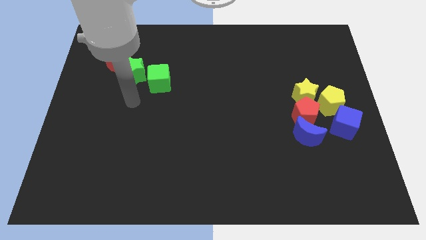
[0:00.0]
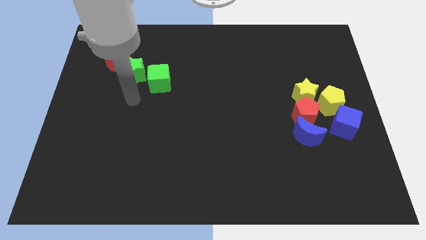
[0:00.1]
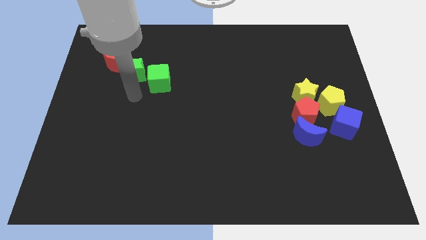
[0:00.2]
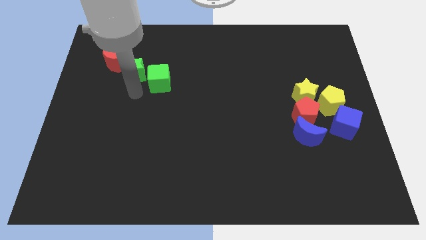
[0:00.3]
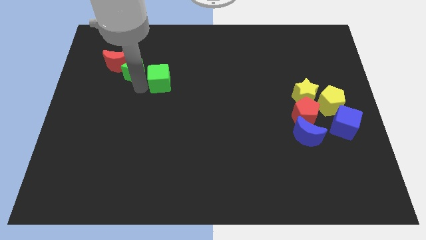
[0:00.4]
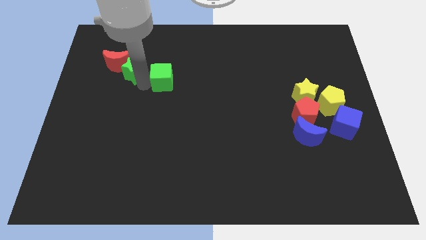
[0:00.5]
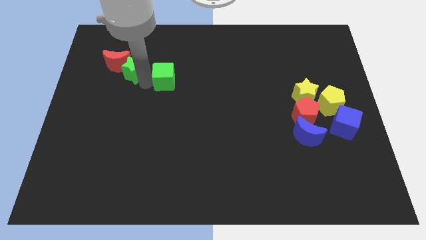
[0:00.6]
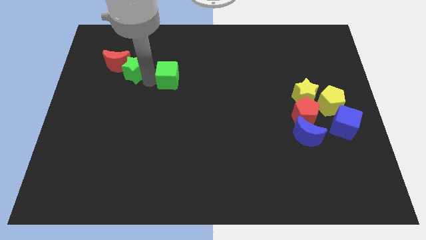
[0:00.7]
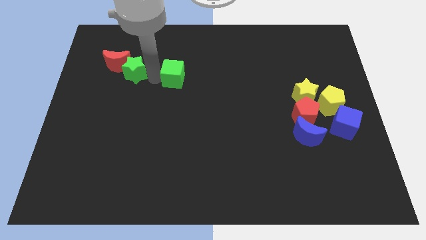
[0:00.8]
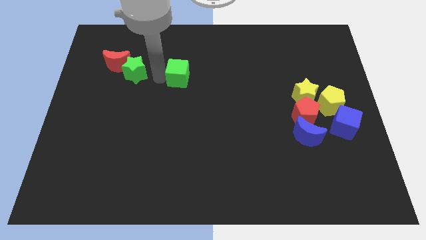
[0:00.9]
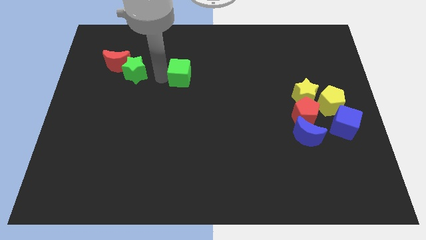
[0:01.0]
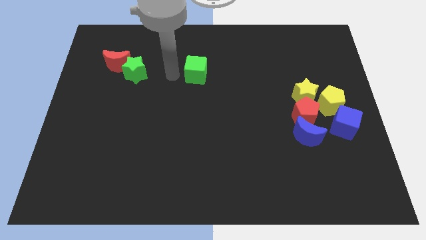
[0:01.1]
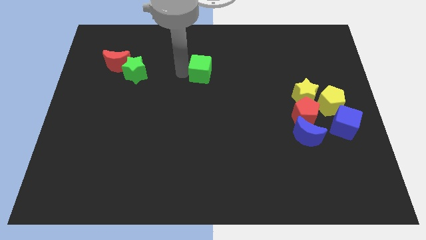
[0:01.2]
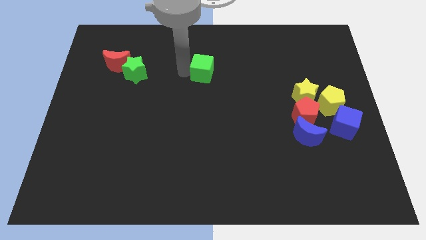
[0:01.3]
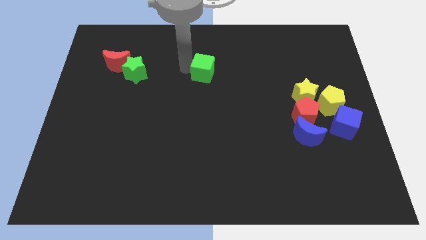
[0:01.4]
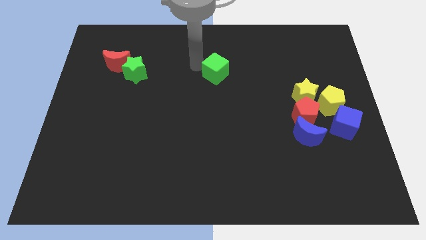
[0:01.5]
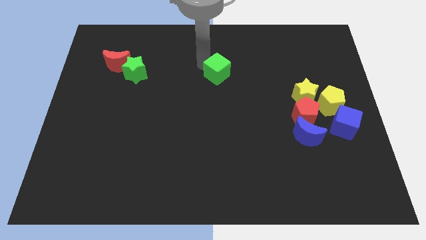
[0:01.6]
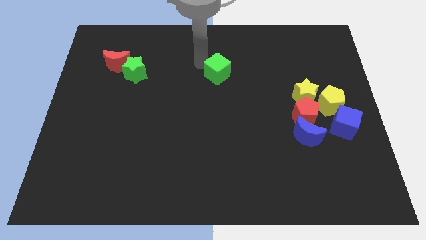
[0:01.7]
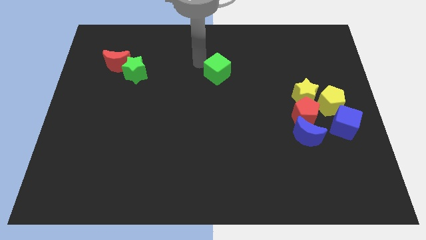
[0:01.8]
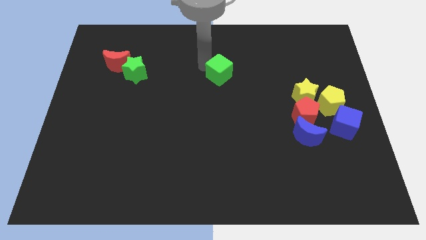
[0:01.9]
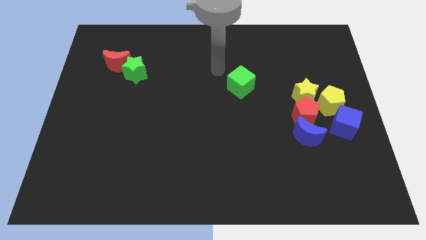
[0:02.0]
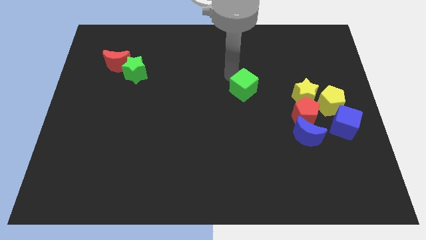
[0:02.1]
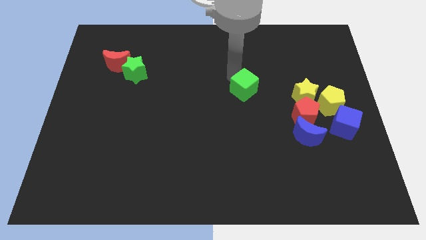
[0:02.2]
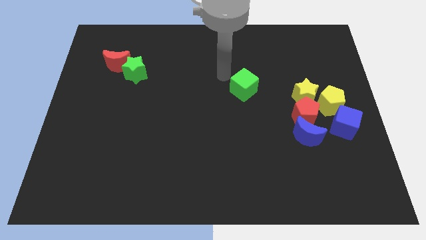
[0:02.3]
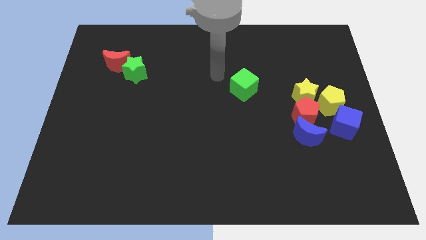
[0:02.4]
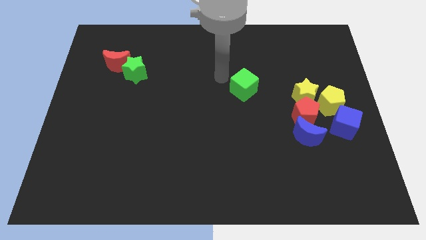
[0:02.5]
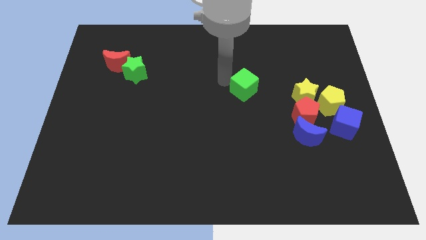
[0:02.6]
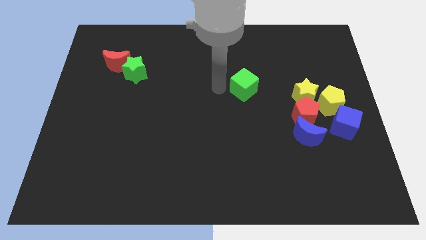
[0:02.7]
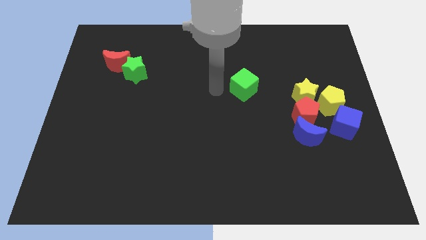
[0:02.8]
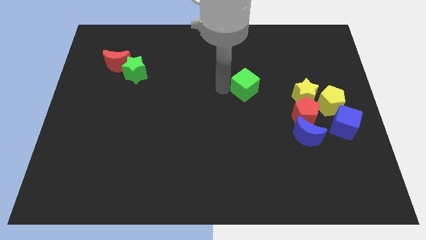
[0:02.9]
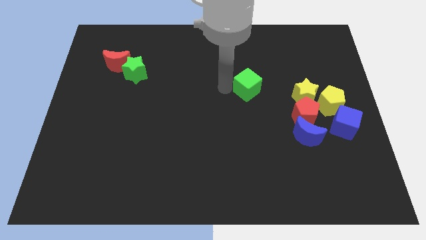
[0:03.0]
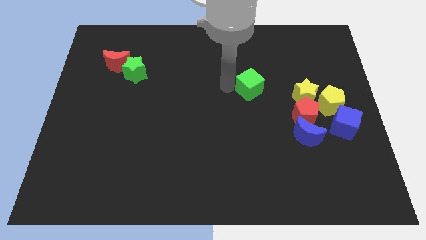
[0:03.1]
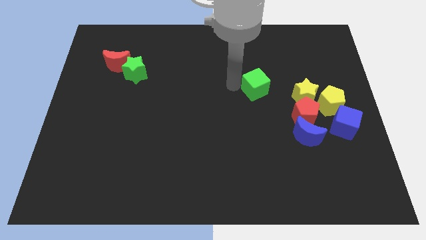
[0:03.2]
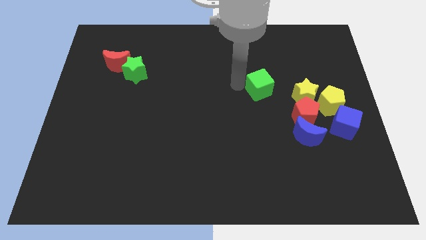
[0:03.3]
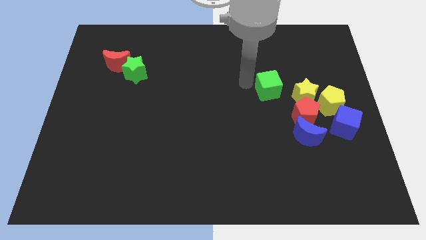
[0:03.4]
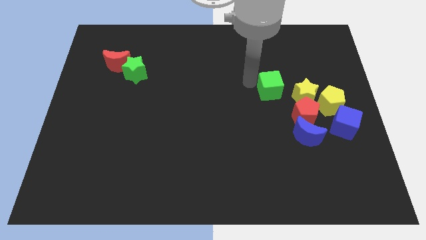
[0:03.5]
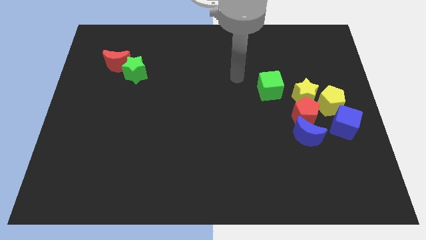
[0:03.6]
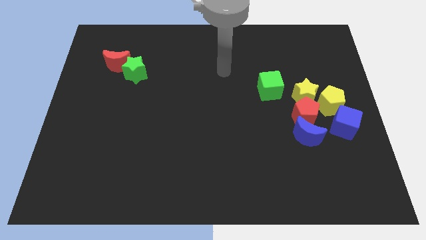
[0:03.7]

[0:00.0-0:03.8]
move the green cube towards the left of the yellow star

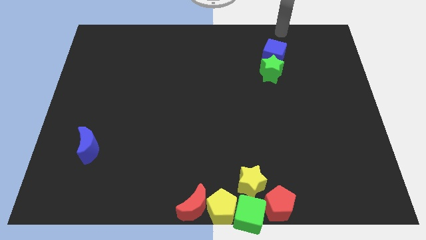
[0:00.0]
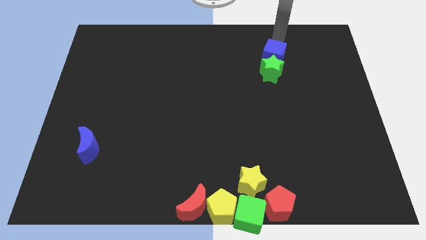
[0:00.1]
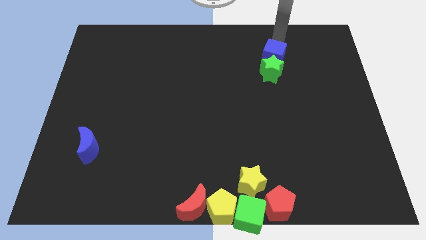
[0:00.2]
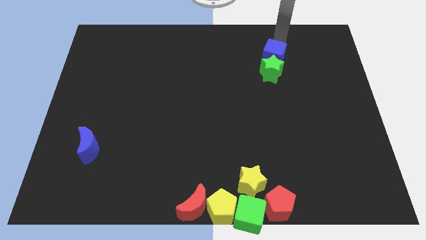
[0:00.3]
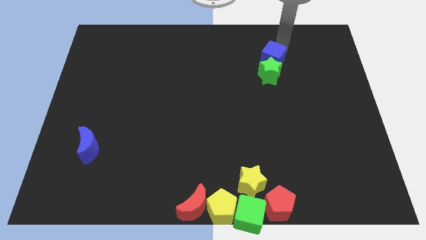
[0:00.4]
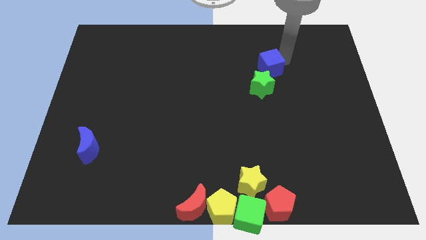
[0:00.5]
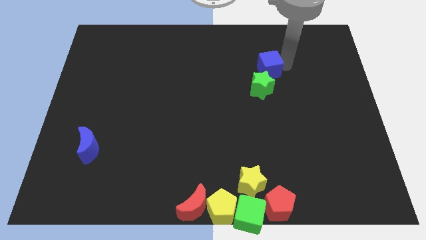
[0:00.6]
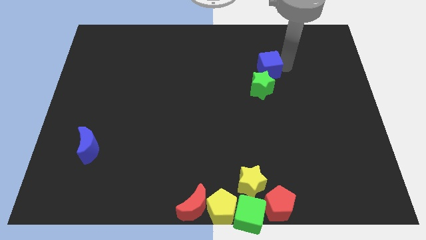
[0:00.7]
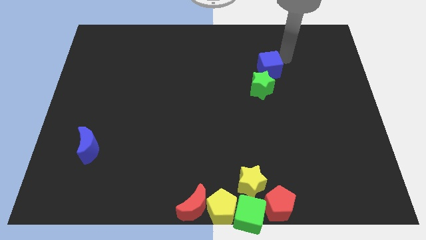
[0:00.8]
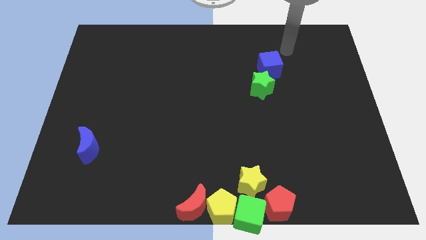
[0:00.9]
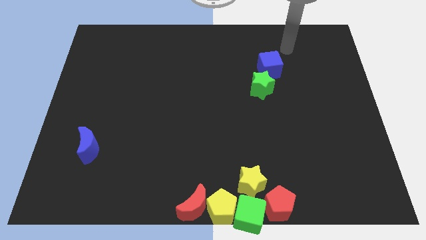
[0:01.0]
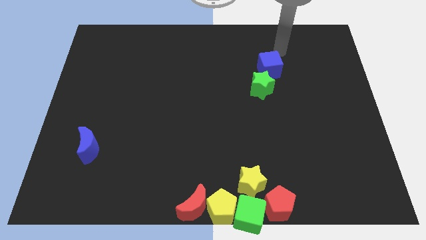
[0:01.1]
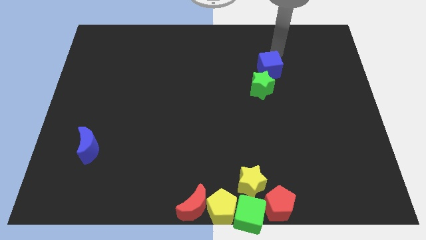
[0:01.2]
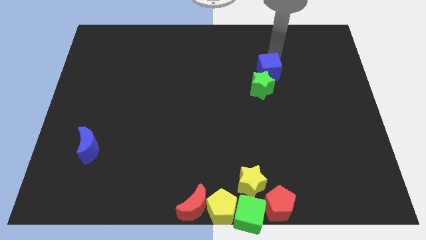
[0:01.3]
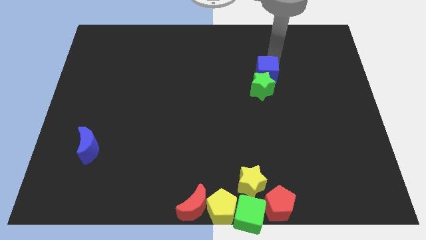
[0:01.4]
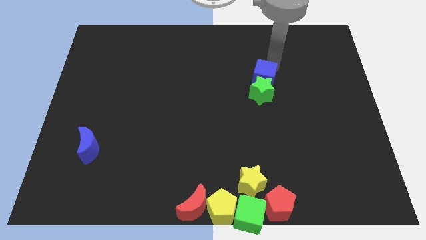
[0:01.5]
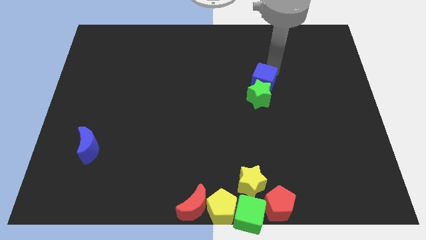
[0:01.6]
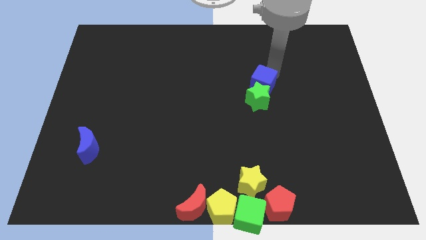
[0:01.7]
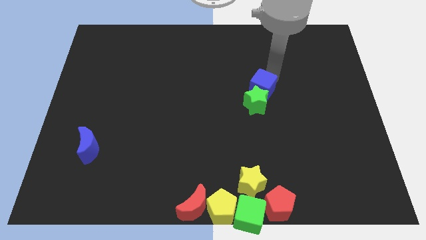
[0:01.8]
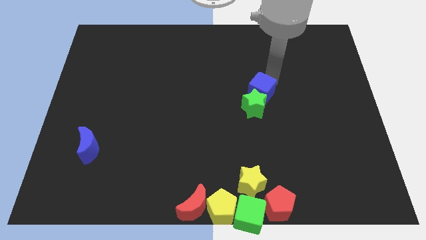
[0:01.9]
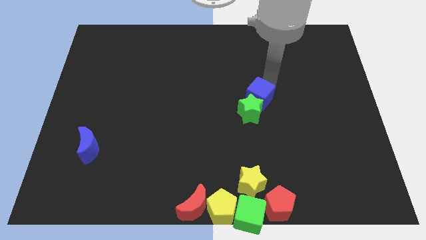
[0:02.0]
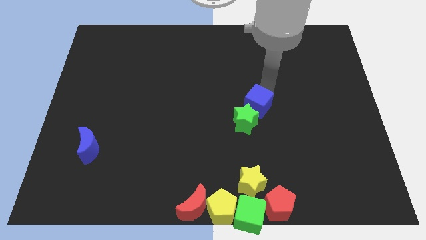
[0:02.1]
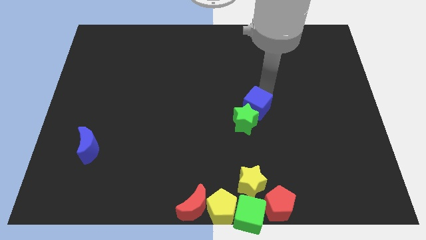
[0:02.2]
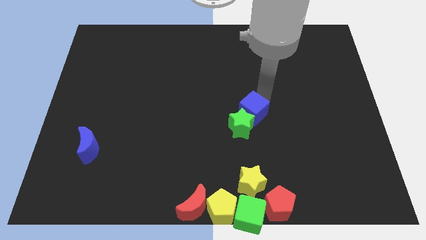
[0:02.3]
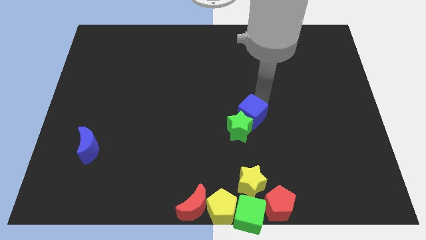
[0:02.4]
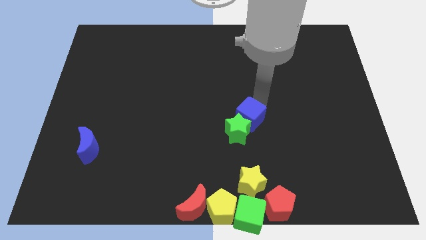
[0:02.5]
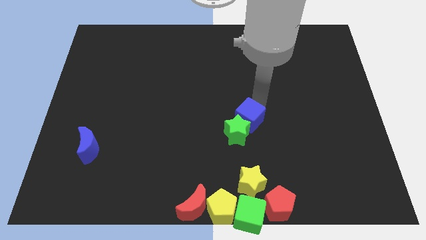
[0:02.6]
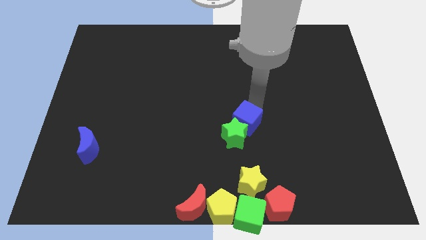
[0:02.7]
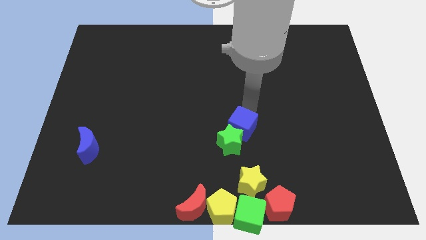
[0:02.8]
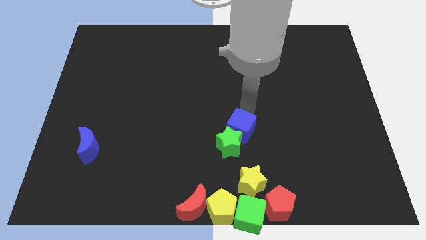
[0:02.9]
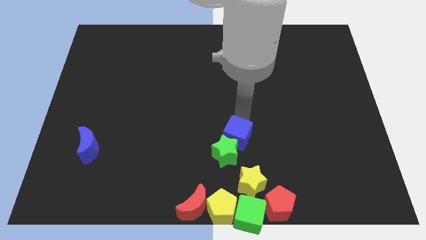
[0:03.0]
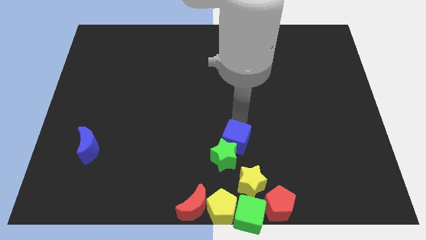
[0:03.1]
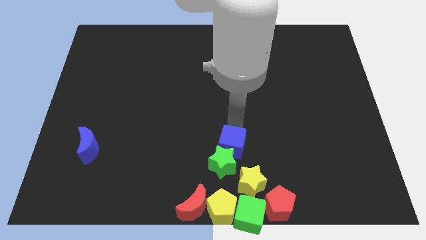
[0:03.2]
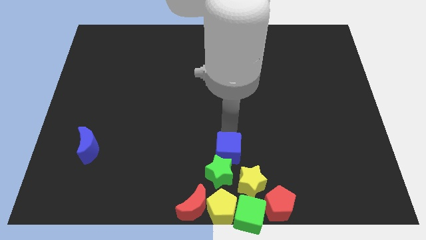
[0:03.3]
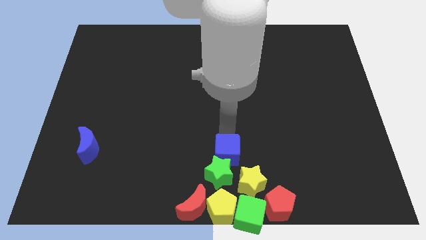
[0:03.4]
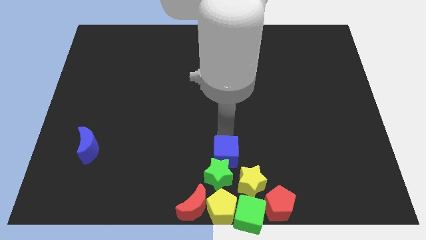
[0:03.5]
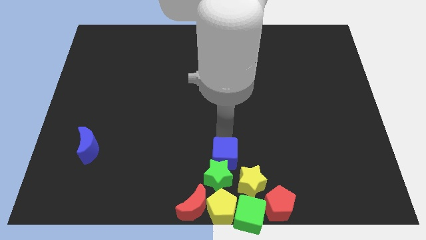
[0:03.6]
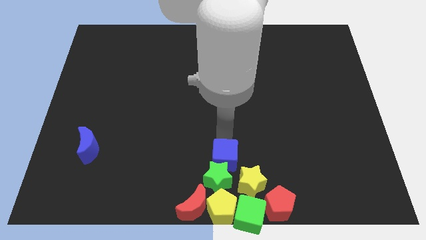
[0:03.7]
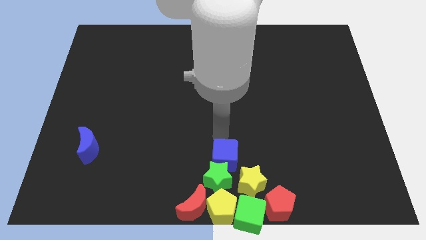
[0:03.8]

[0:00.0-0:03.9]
move blue cube and green star towards bottom center
